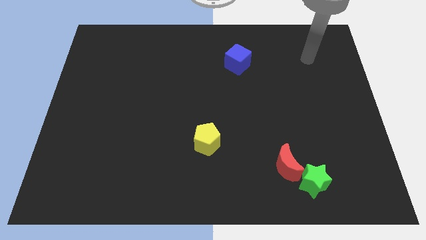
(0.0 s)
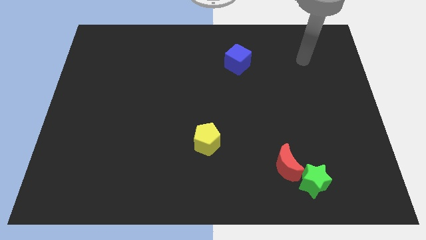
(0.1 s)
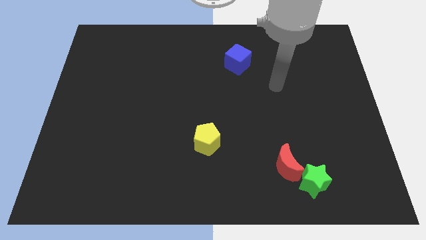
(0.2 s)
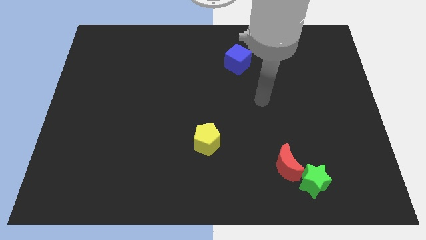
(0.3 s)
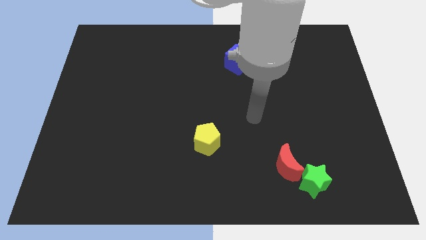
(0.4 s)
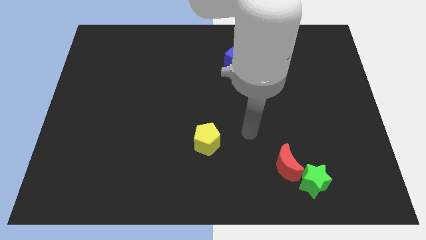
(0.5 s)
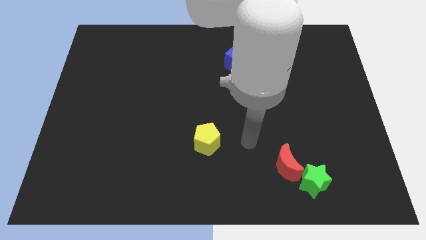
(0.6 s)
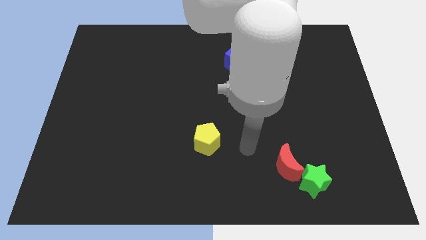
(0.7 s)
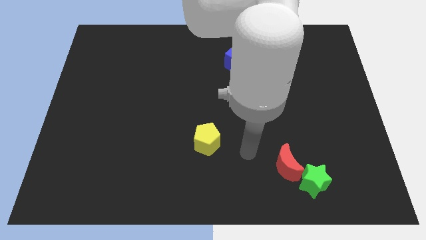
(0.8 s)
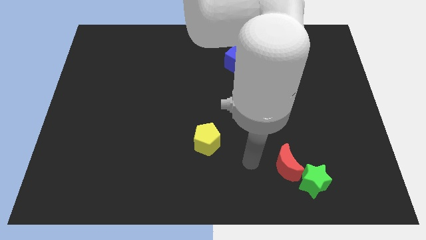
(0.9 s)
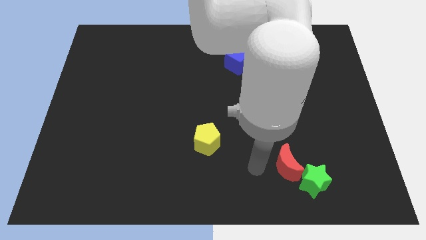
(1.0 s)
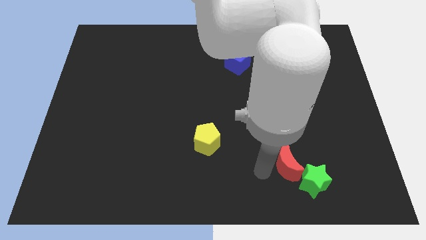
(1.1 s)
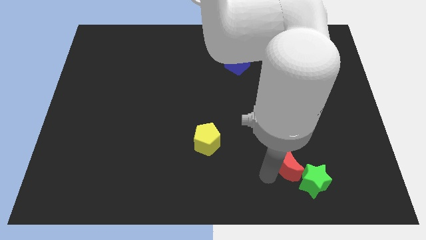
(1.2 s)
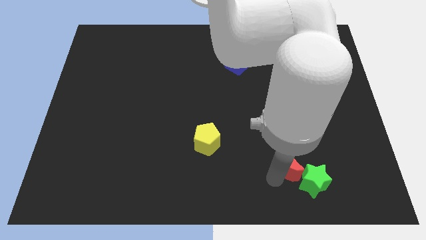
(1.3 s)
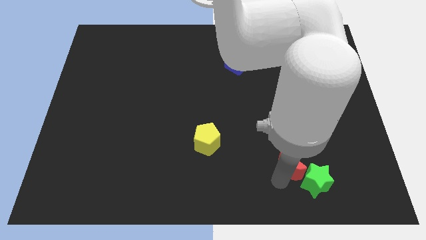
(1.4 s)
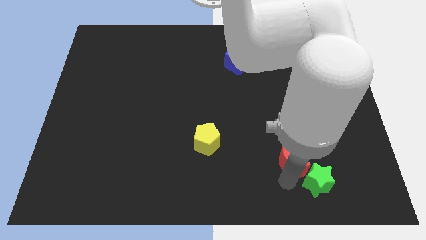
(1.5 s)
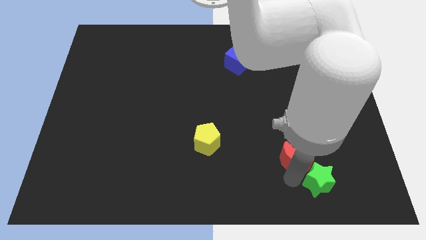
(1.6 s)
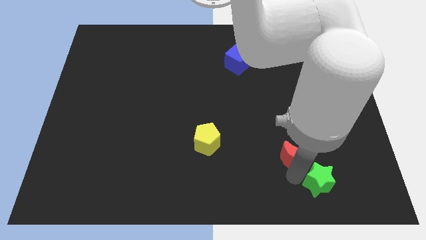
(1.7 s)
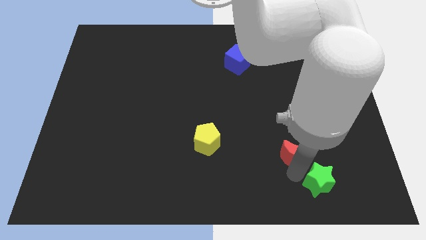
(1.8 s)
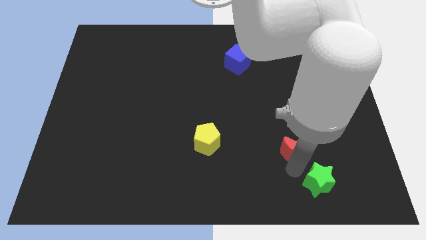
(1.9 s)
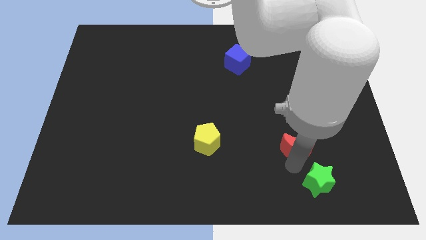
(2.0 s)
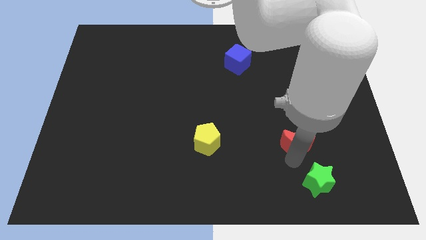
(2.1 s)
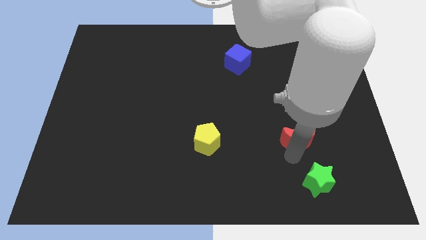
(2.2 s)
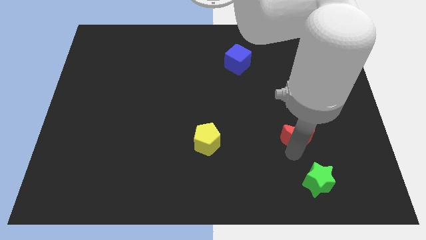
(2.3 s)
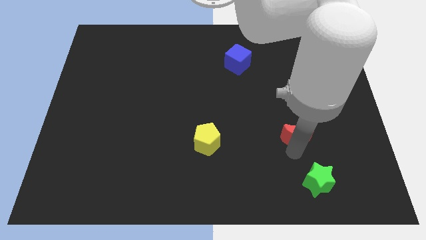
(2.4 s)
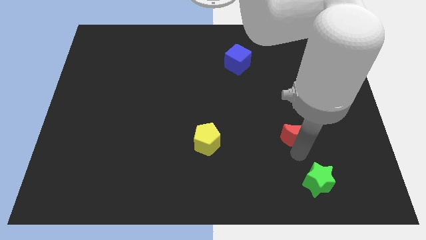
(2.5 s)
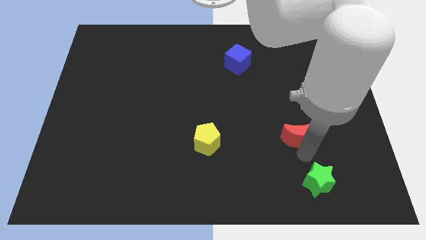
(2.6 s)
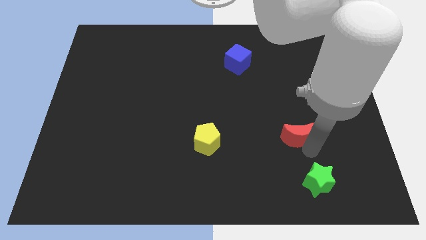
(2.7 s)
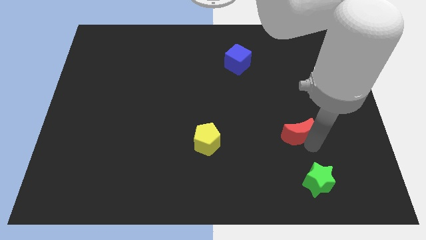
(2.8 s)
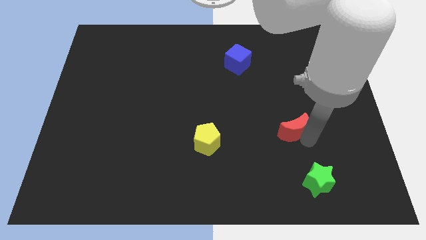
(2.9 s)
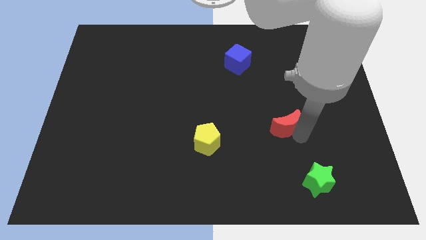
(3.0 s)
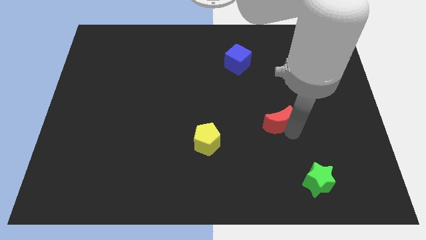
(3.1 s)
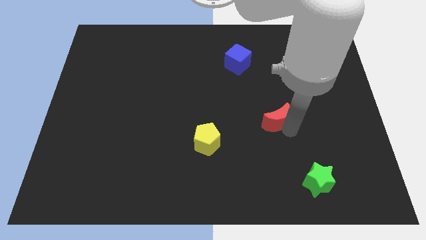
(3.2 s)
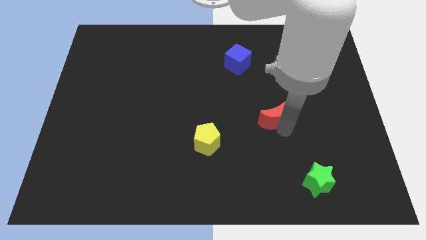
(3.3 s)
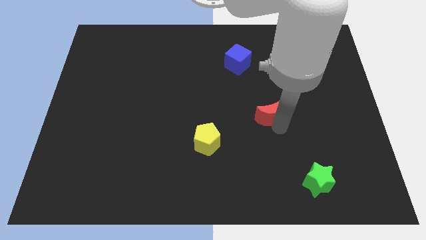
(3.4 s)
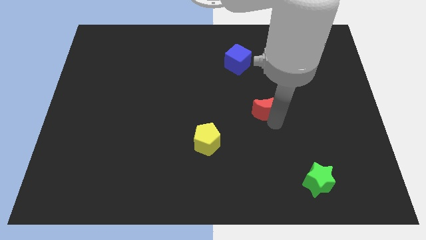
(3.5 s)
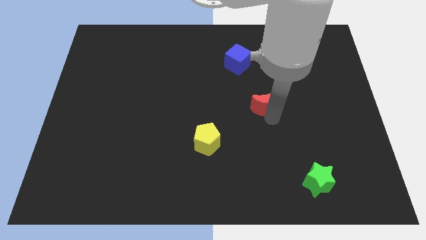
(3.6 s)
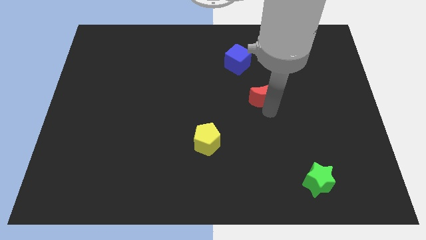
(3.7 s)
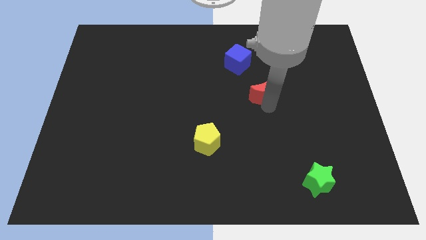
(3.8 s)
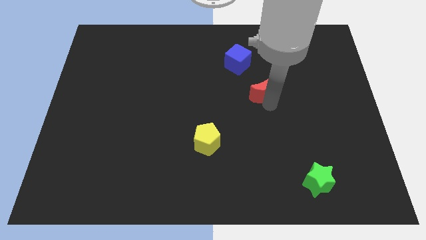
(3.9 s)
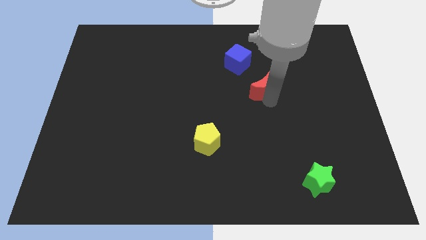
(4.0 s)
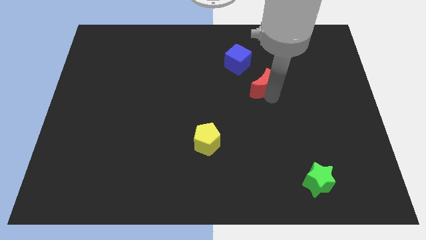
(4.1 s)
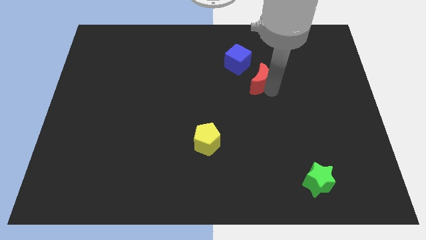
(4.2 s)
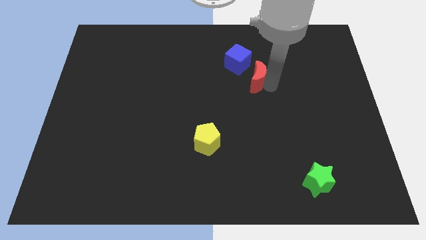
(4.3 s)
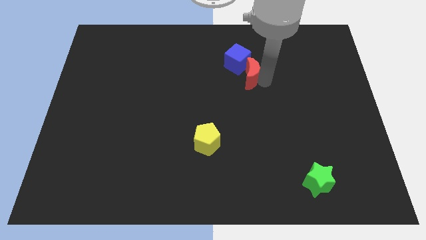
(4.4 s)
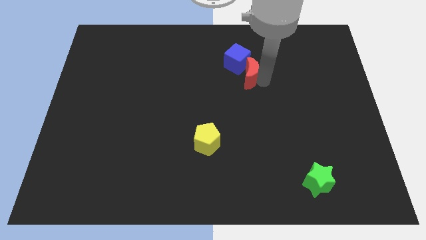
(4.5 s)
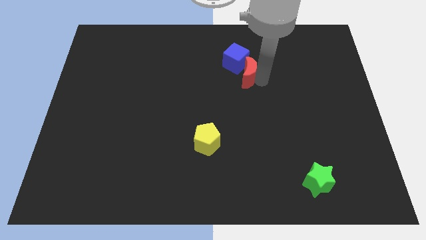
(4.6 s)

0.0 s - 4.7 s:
move the moon to the blue cube

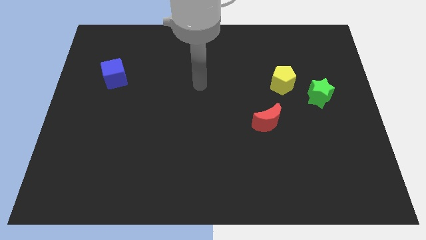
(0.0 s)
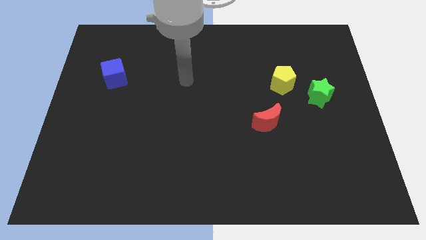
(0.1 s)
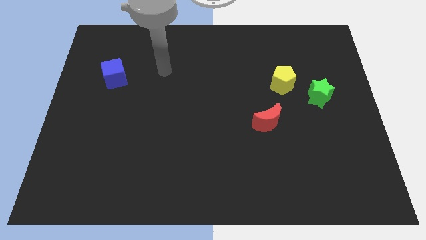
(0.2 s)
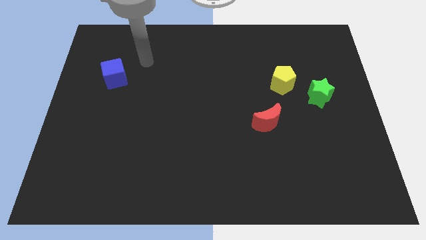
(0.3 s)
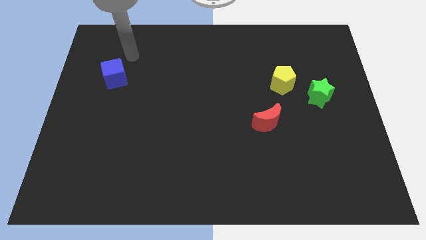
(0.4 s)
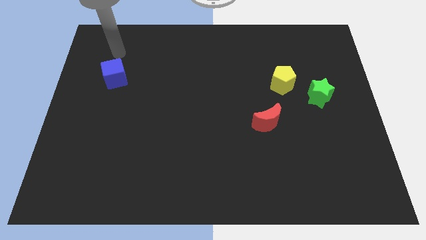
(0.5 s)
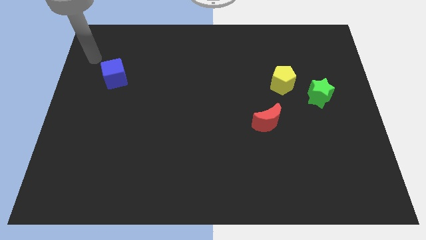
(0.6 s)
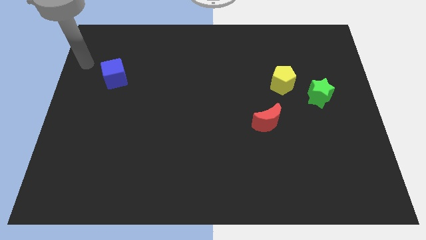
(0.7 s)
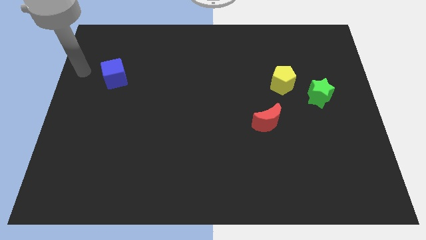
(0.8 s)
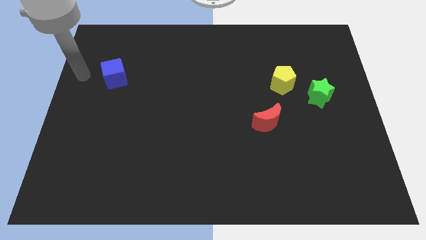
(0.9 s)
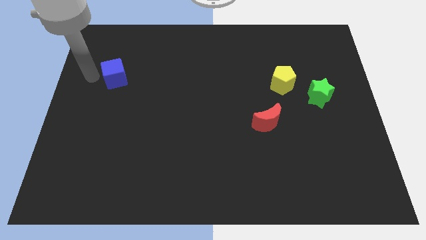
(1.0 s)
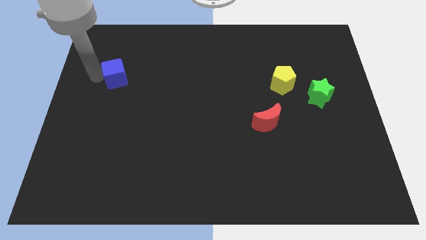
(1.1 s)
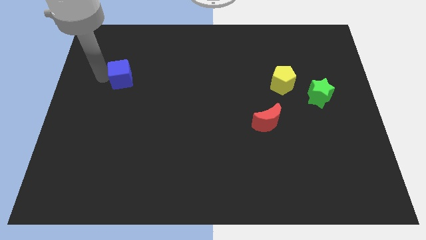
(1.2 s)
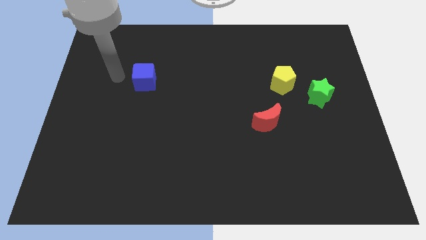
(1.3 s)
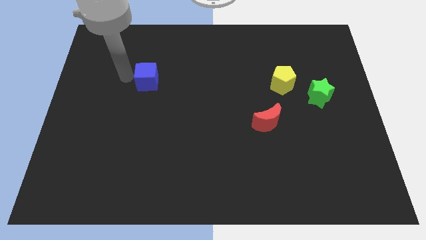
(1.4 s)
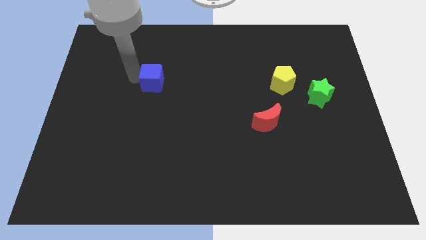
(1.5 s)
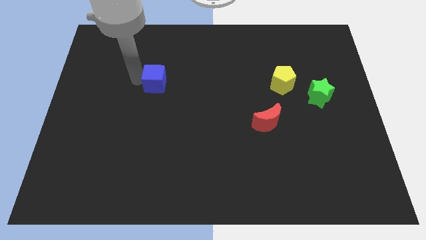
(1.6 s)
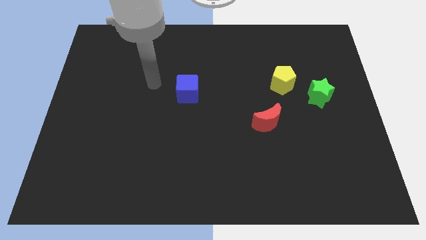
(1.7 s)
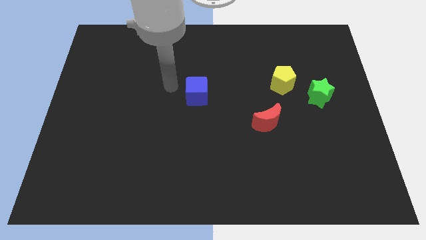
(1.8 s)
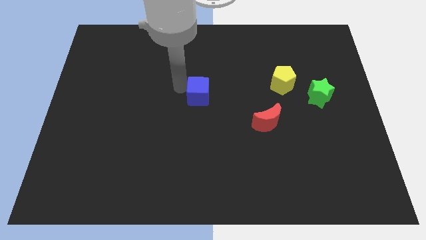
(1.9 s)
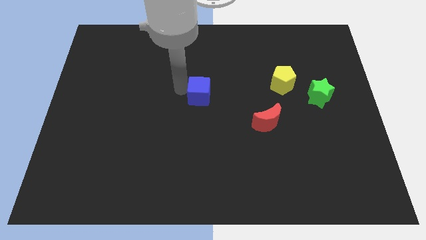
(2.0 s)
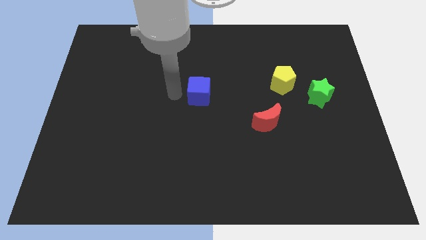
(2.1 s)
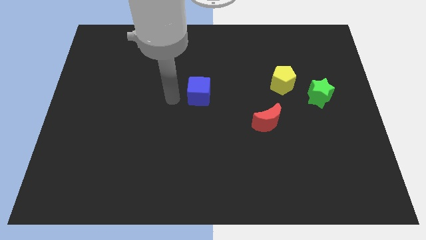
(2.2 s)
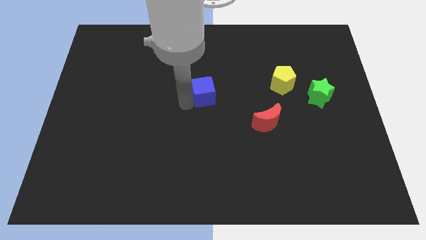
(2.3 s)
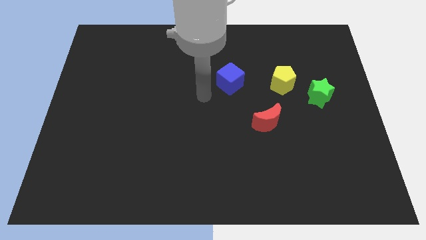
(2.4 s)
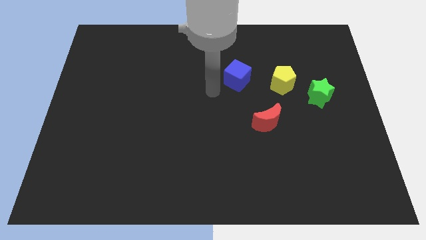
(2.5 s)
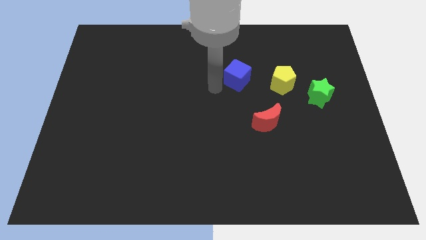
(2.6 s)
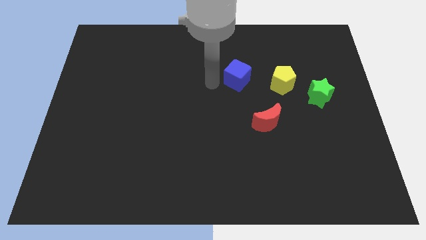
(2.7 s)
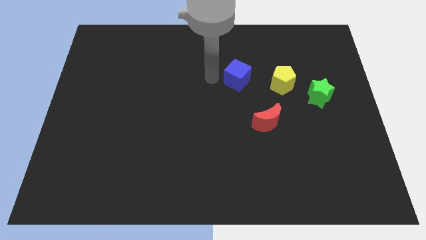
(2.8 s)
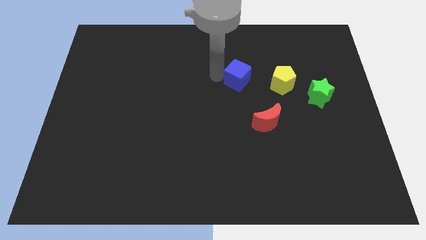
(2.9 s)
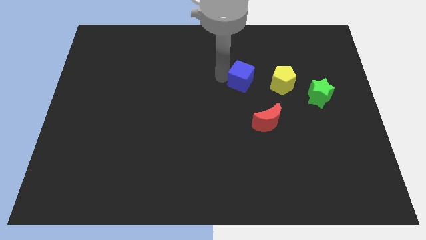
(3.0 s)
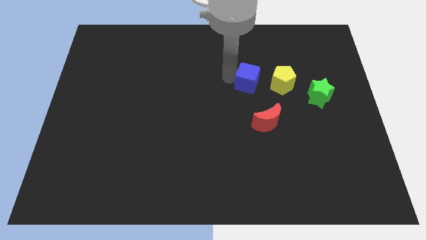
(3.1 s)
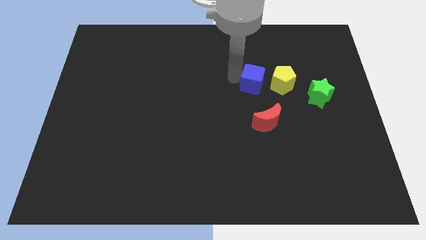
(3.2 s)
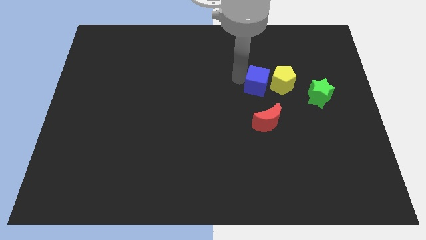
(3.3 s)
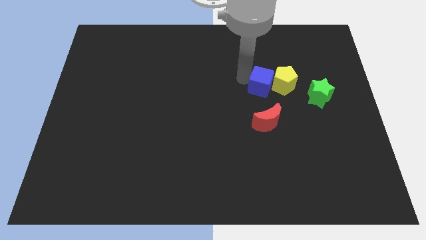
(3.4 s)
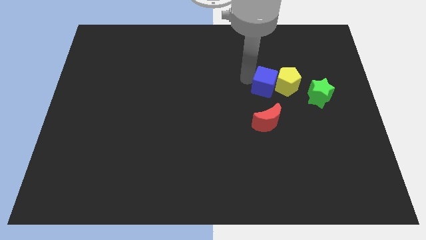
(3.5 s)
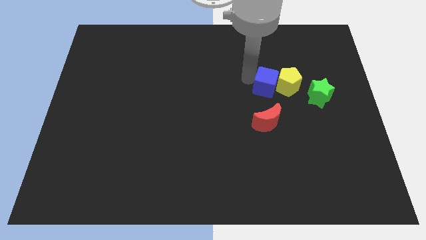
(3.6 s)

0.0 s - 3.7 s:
slide the blue block close to the yellow block

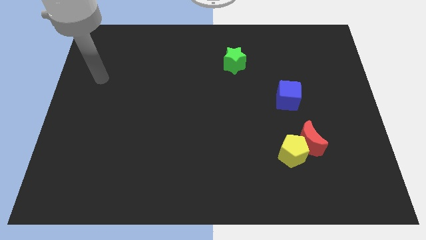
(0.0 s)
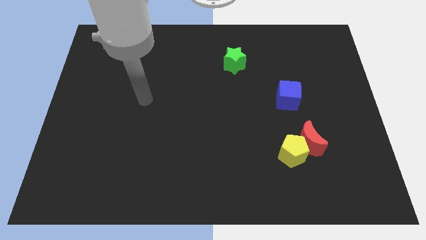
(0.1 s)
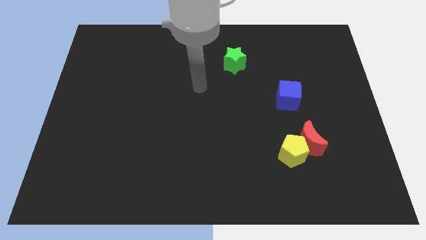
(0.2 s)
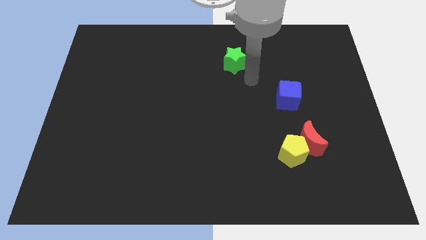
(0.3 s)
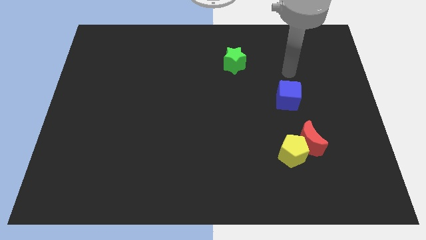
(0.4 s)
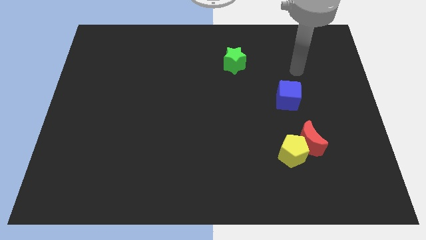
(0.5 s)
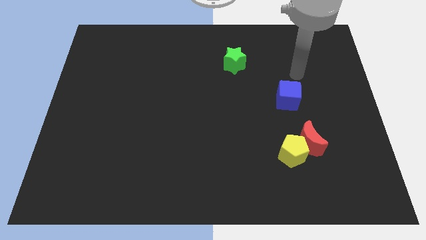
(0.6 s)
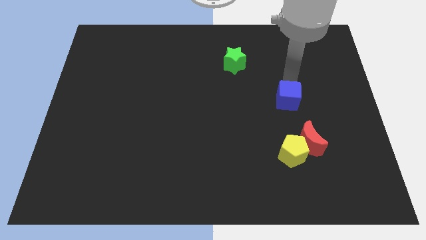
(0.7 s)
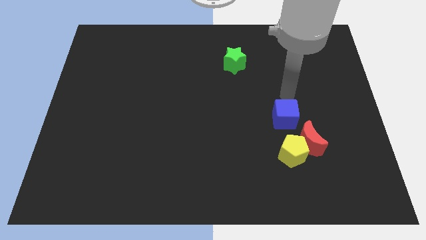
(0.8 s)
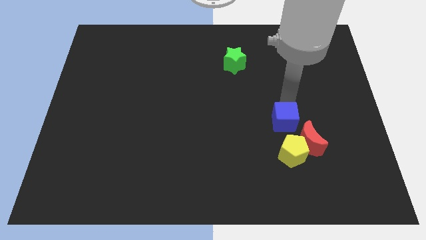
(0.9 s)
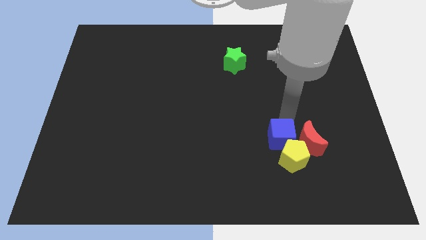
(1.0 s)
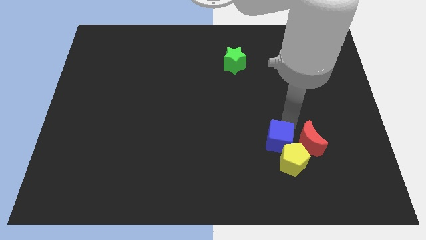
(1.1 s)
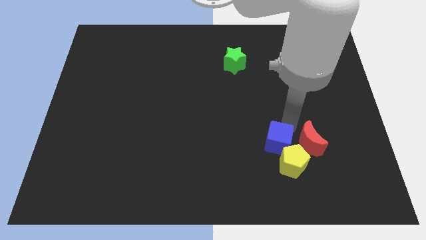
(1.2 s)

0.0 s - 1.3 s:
put the cube towards the pentagon
